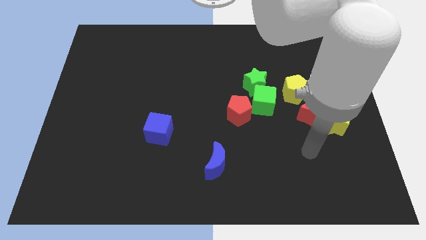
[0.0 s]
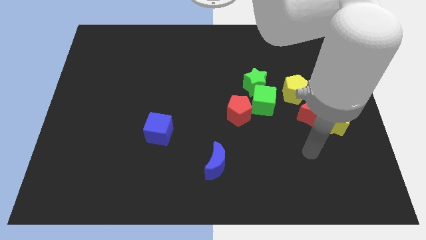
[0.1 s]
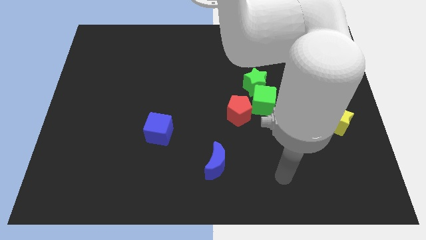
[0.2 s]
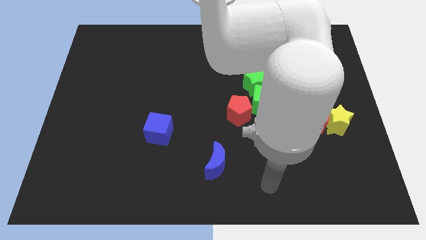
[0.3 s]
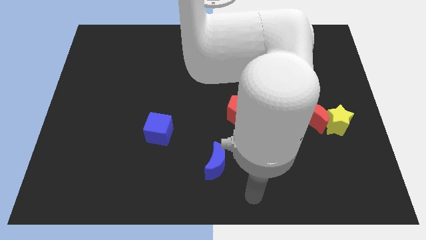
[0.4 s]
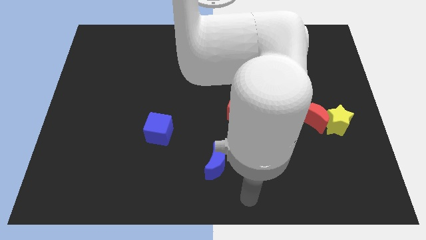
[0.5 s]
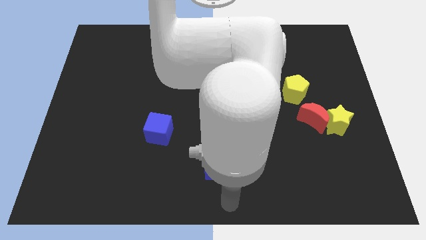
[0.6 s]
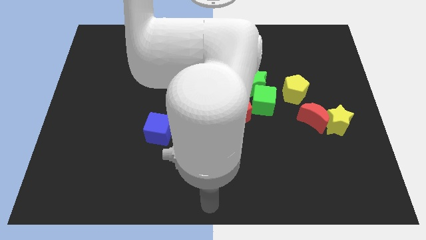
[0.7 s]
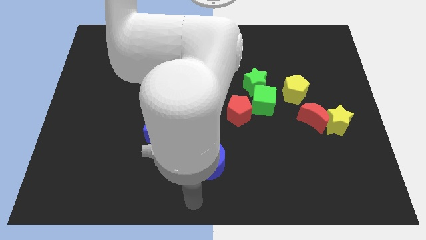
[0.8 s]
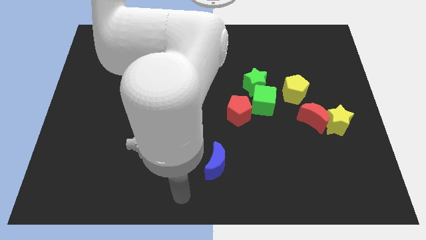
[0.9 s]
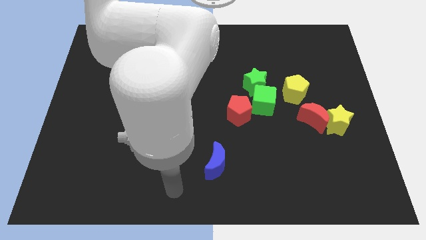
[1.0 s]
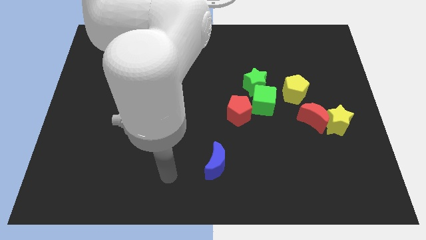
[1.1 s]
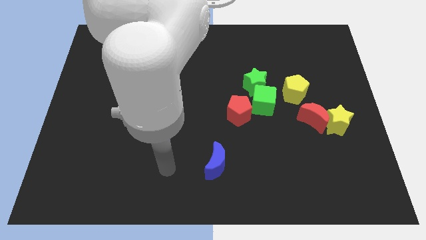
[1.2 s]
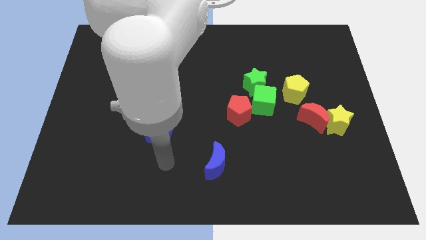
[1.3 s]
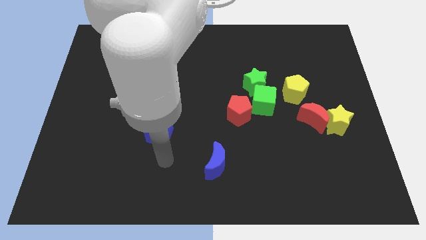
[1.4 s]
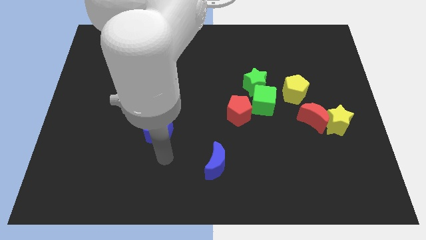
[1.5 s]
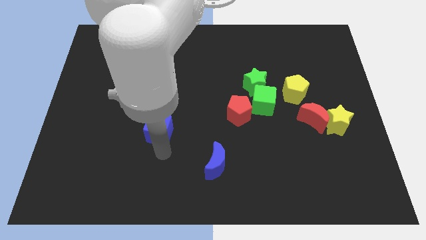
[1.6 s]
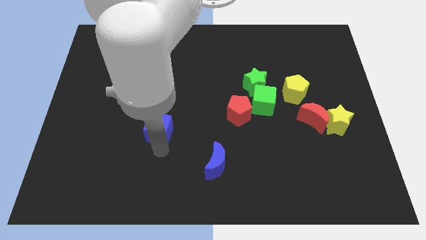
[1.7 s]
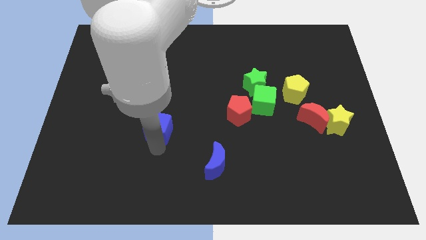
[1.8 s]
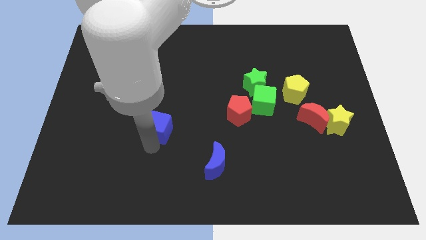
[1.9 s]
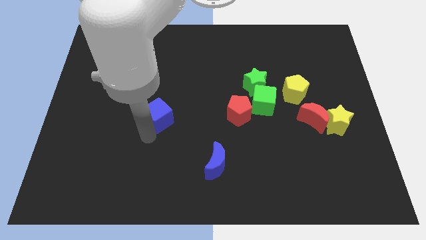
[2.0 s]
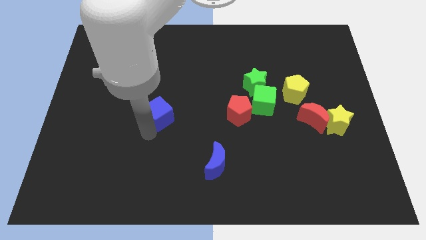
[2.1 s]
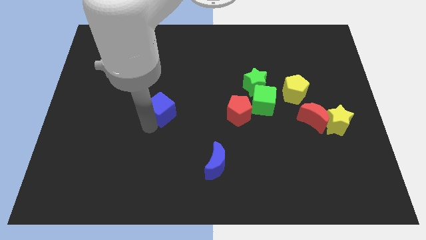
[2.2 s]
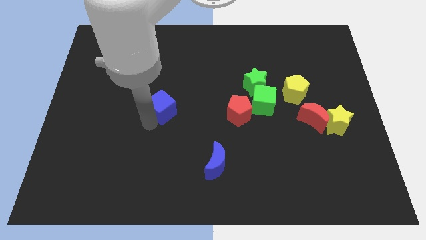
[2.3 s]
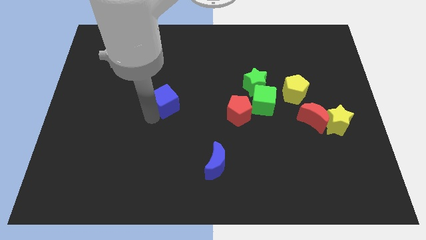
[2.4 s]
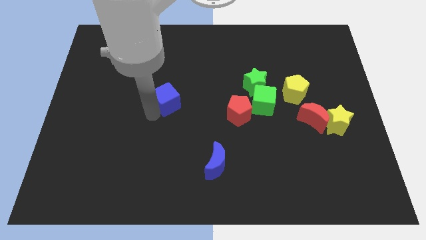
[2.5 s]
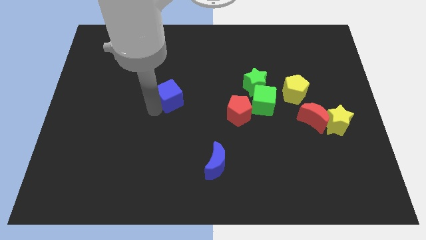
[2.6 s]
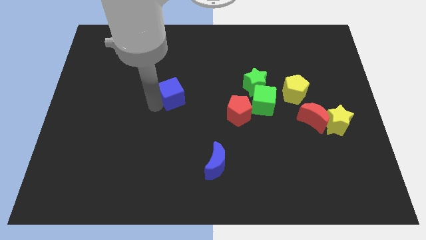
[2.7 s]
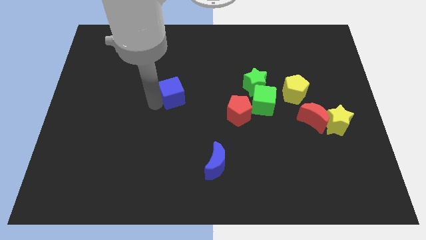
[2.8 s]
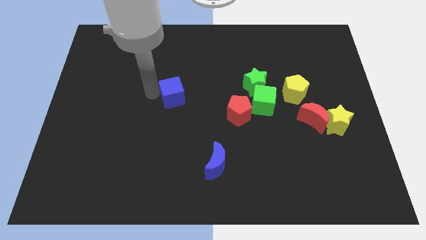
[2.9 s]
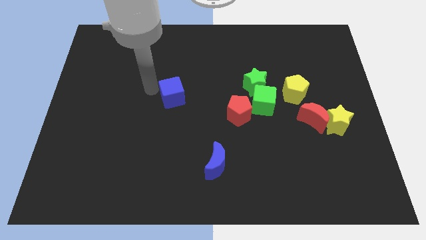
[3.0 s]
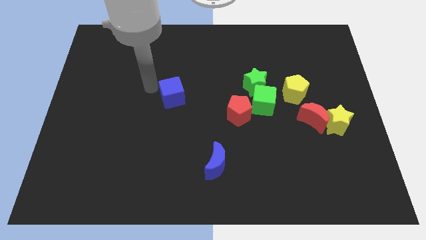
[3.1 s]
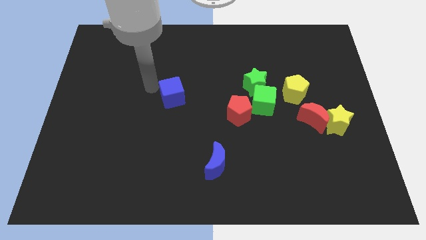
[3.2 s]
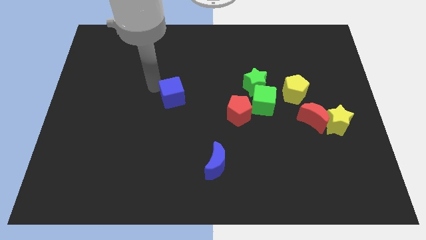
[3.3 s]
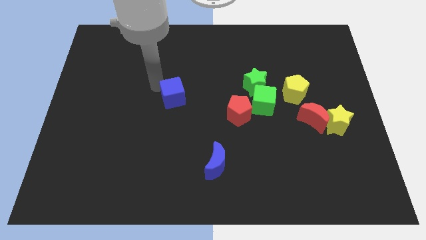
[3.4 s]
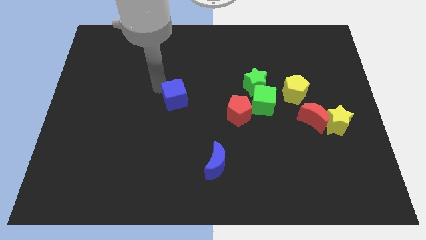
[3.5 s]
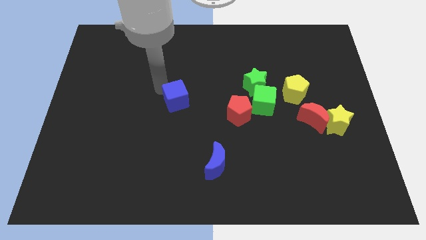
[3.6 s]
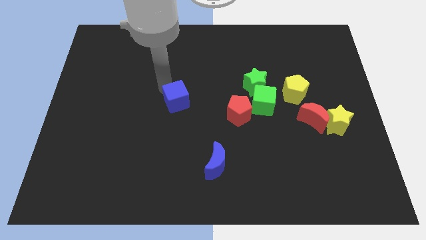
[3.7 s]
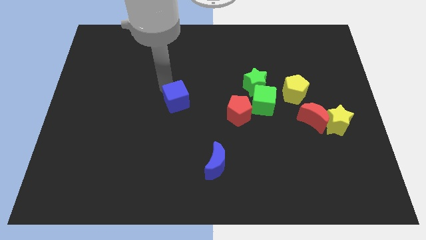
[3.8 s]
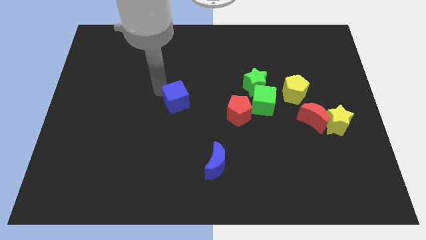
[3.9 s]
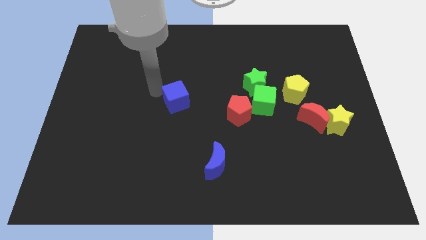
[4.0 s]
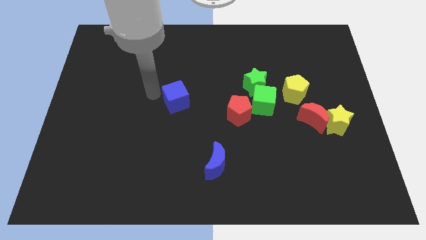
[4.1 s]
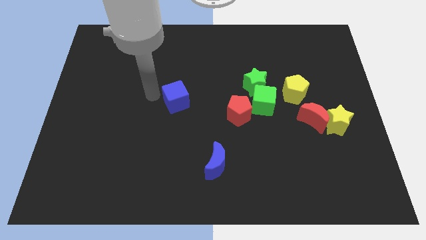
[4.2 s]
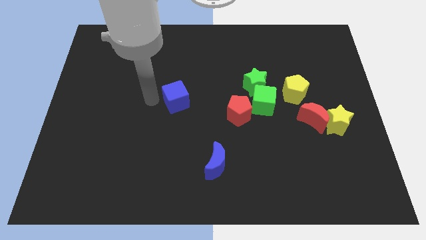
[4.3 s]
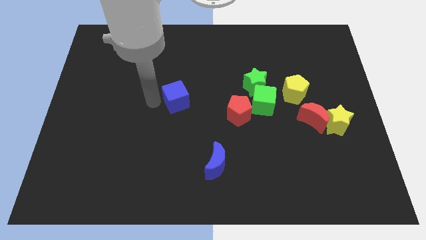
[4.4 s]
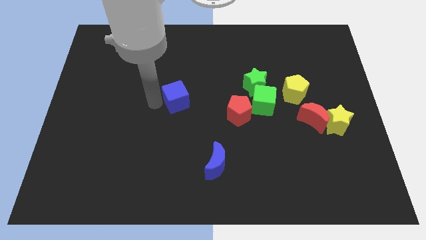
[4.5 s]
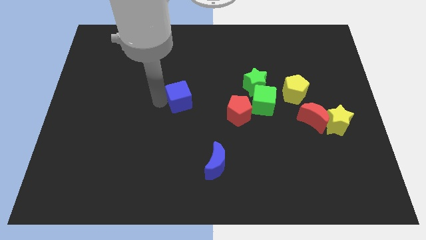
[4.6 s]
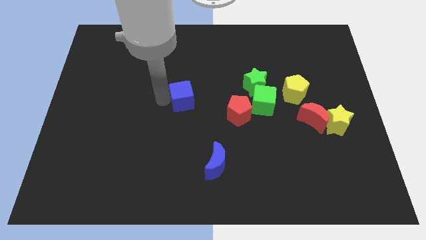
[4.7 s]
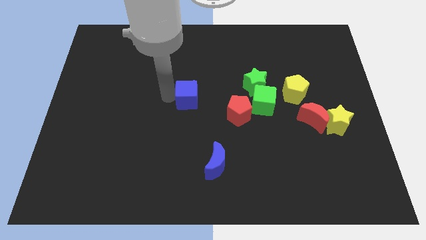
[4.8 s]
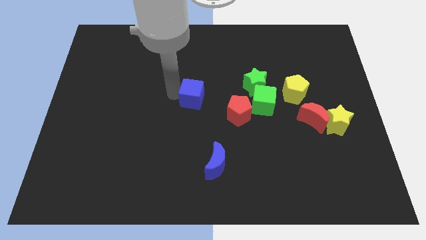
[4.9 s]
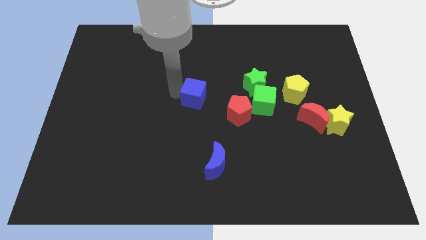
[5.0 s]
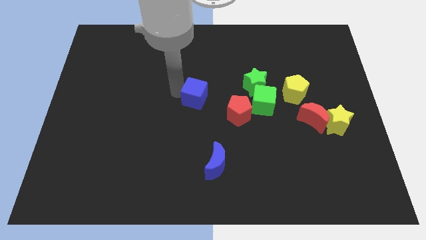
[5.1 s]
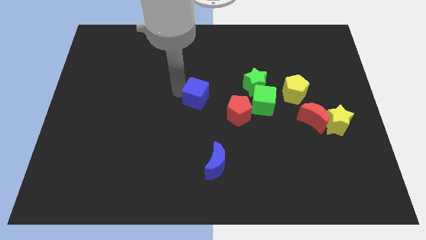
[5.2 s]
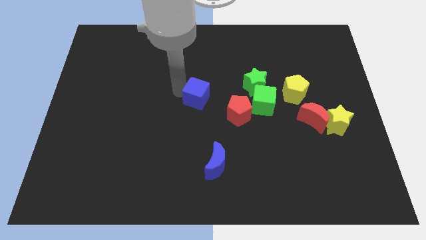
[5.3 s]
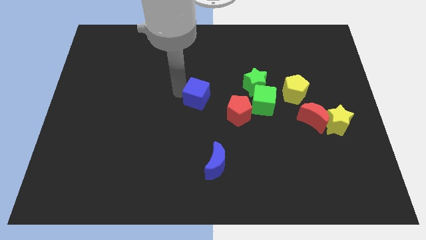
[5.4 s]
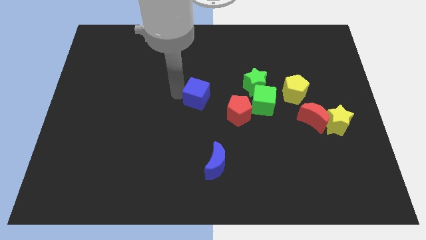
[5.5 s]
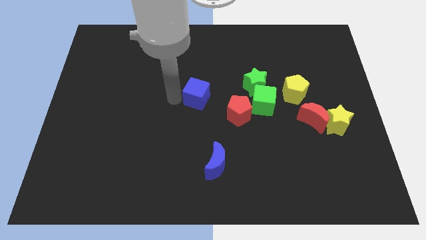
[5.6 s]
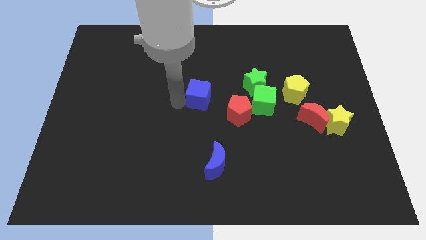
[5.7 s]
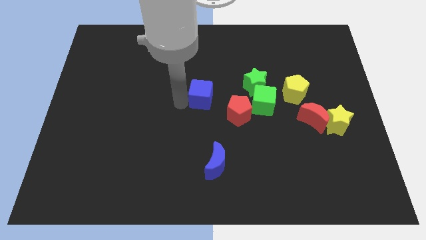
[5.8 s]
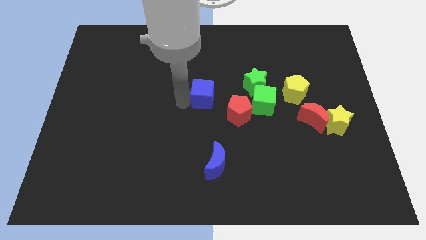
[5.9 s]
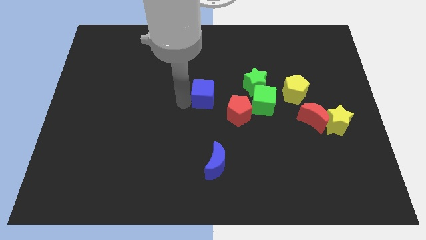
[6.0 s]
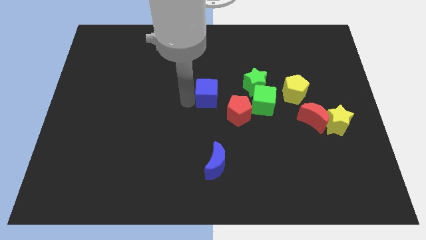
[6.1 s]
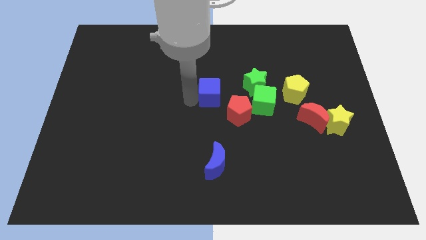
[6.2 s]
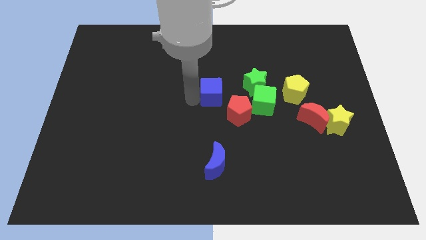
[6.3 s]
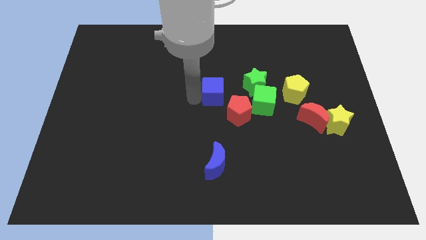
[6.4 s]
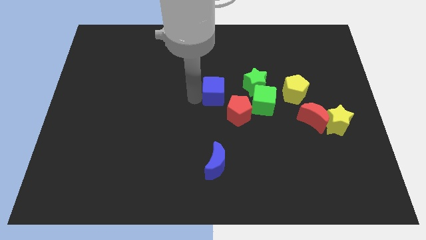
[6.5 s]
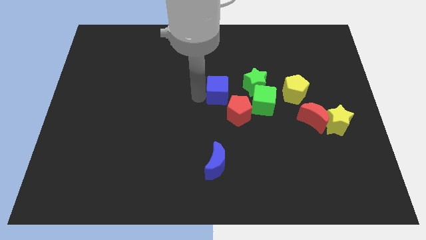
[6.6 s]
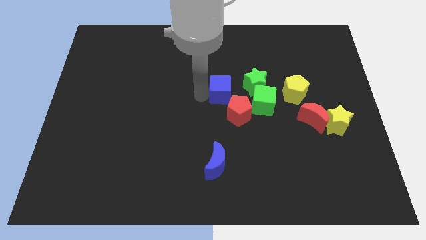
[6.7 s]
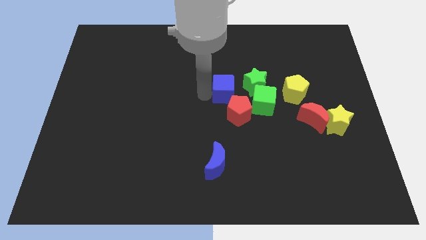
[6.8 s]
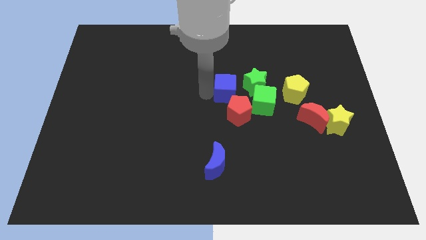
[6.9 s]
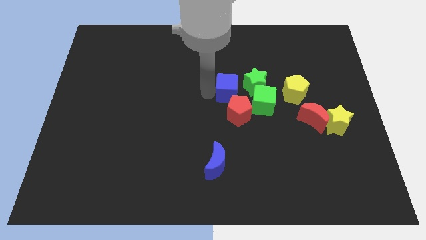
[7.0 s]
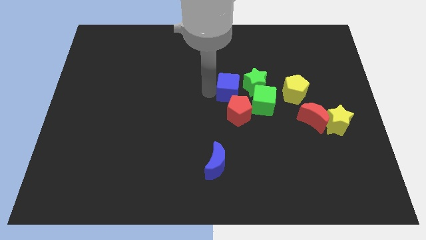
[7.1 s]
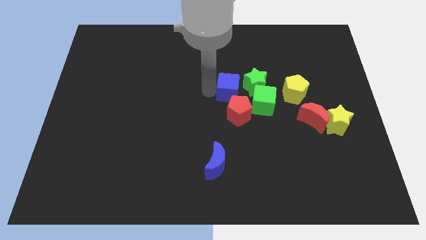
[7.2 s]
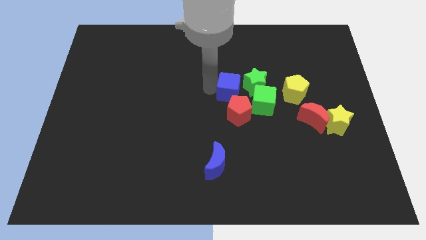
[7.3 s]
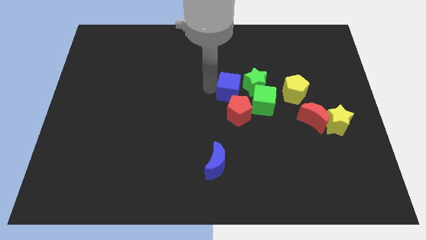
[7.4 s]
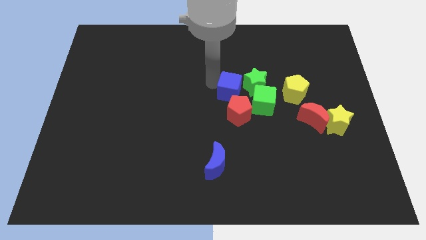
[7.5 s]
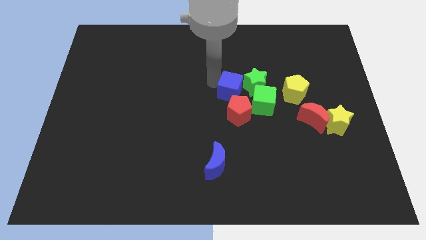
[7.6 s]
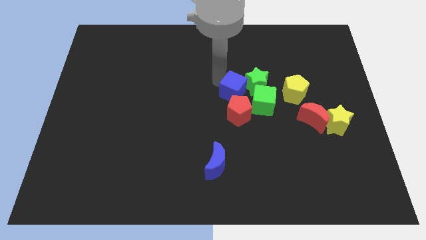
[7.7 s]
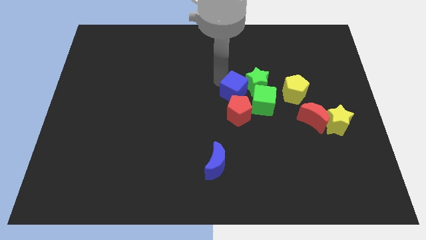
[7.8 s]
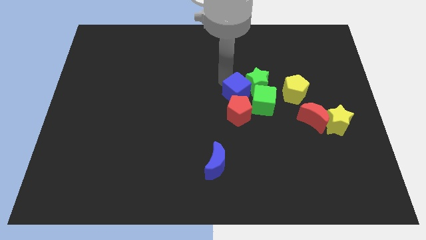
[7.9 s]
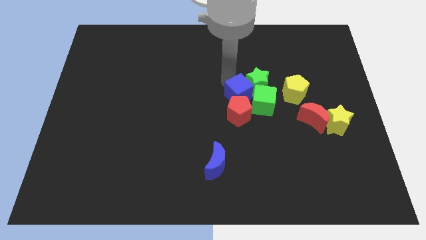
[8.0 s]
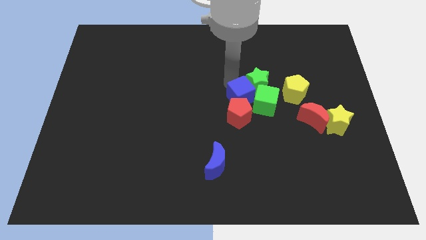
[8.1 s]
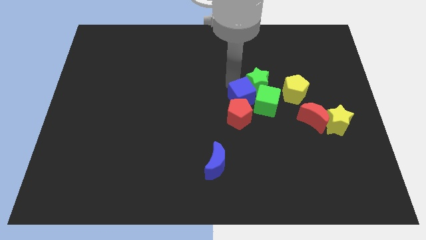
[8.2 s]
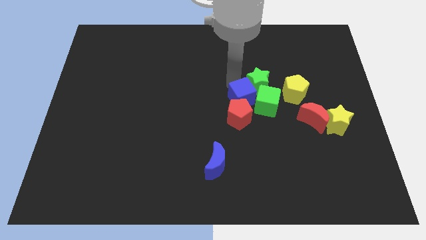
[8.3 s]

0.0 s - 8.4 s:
put the blue cube towards the green cube
